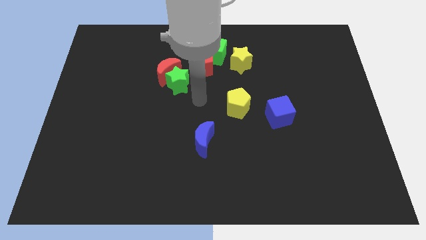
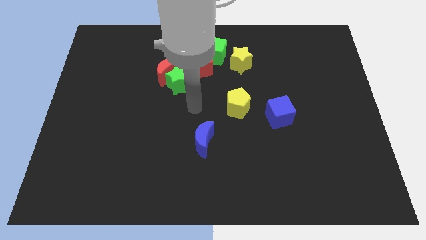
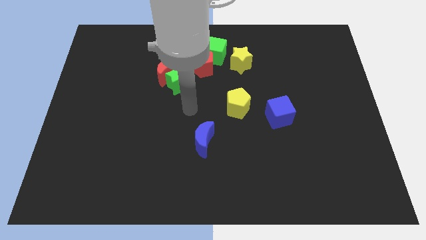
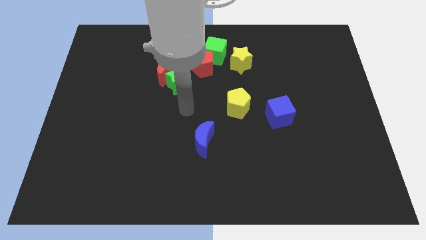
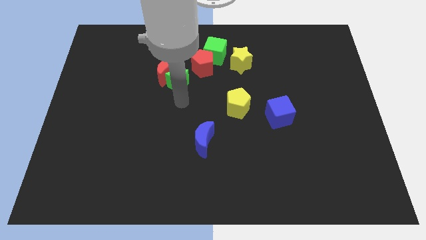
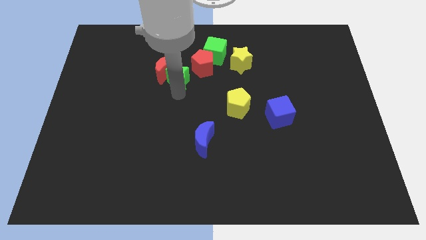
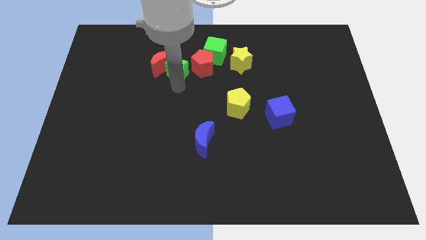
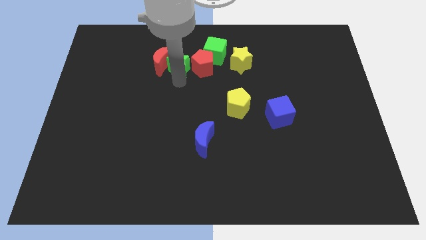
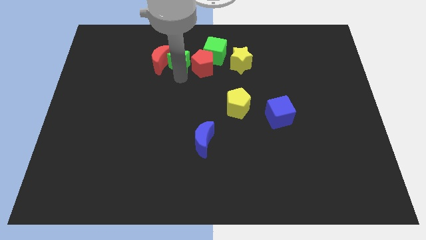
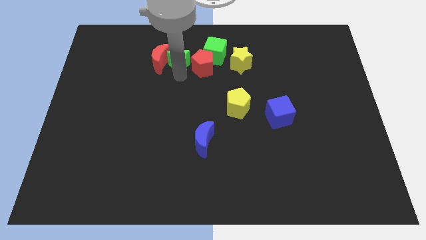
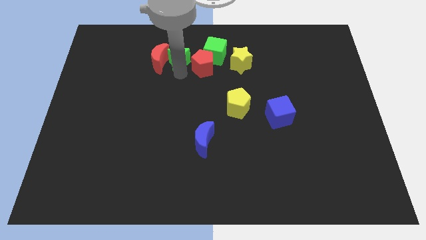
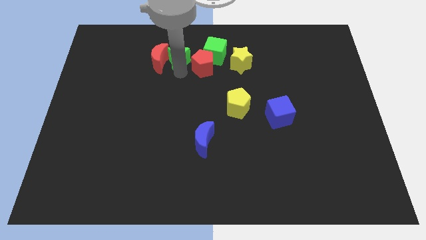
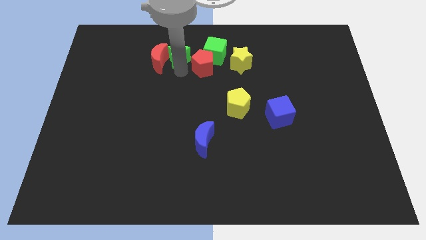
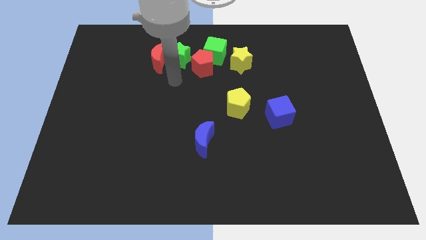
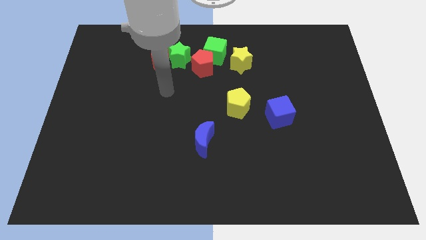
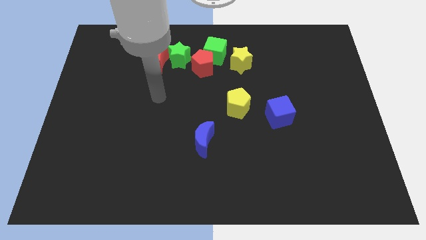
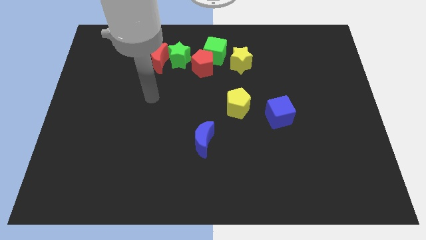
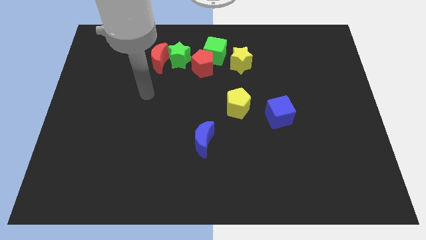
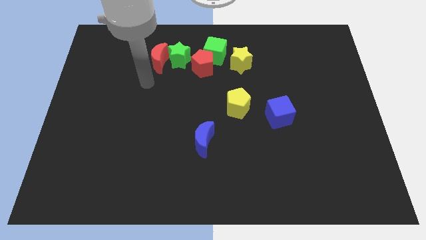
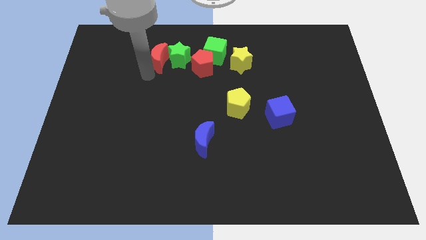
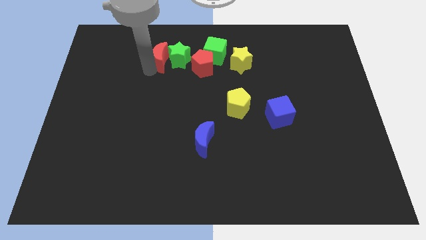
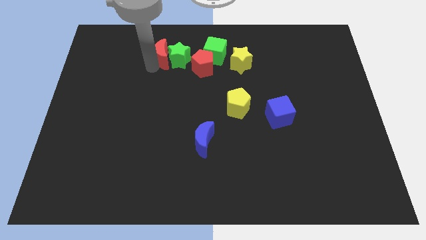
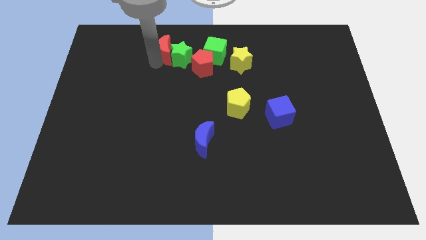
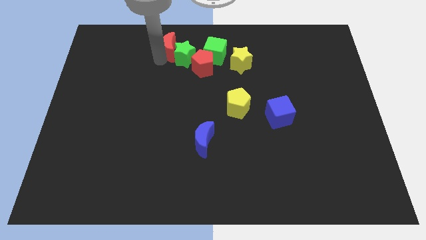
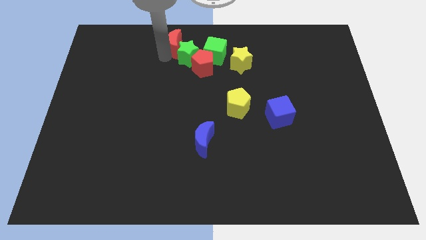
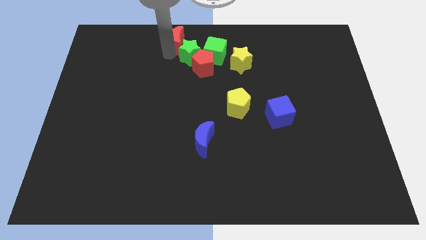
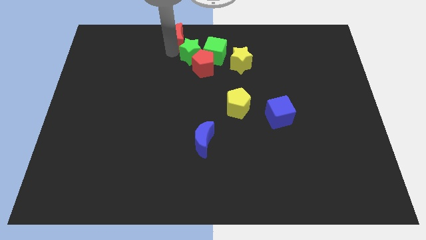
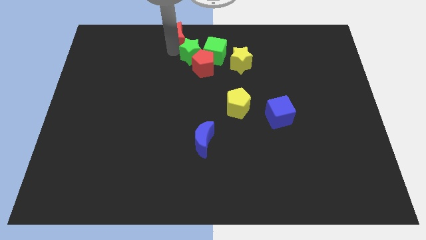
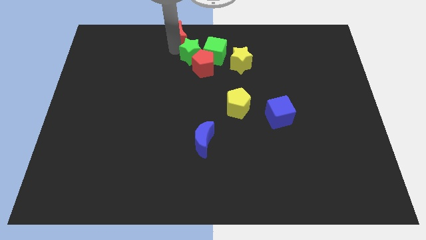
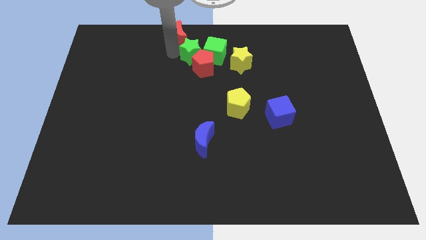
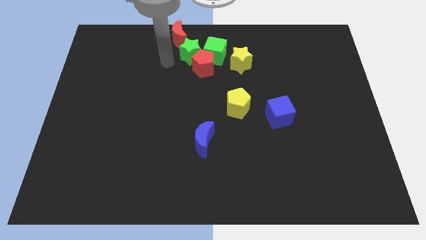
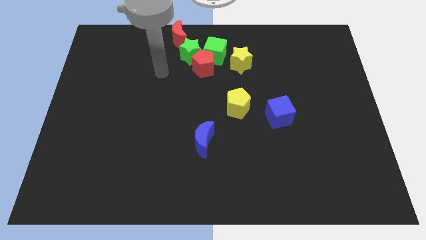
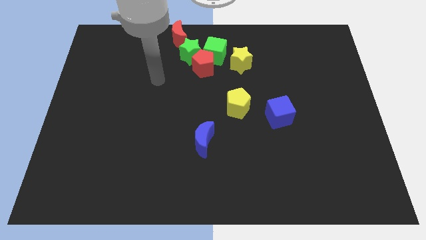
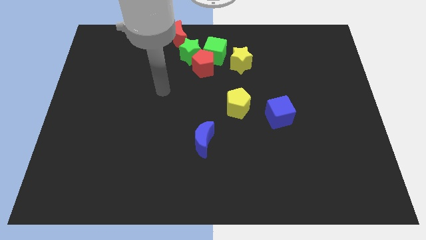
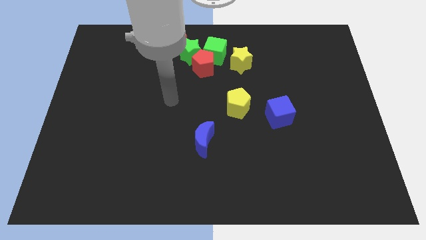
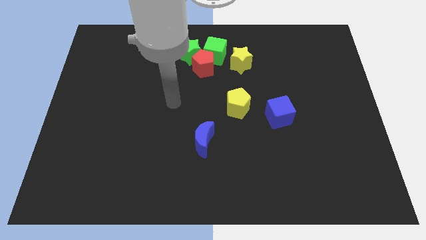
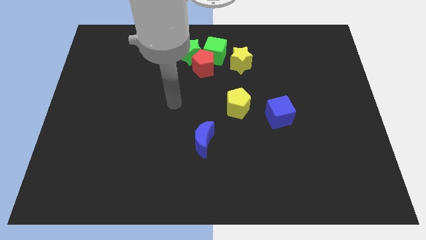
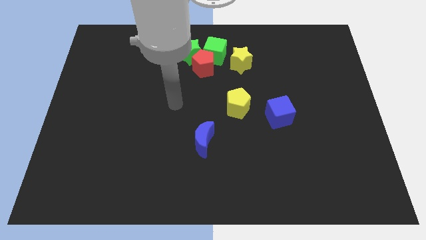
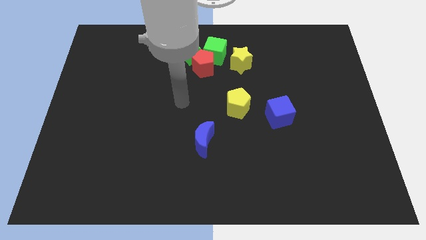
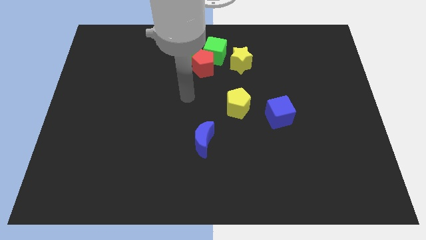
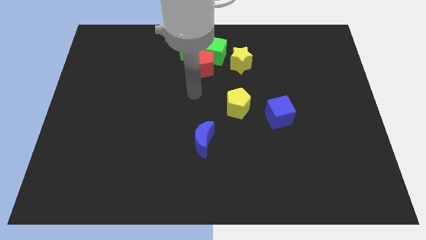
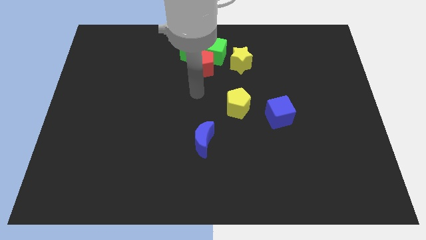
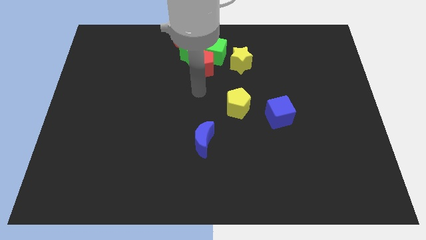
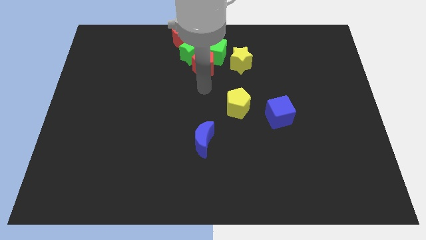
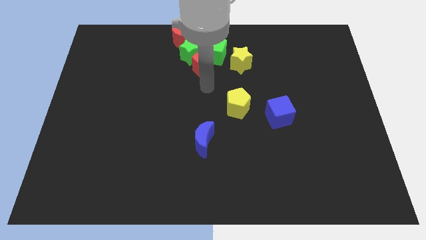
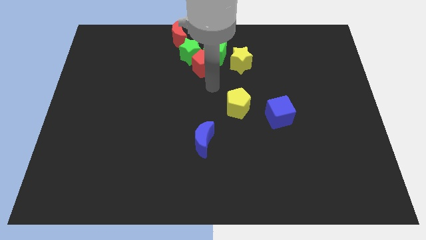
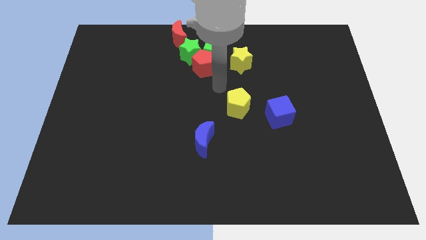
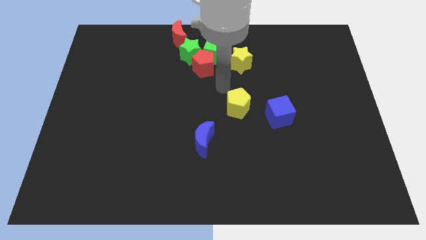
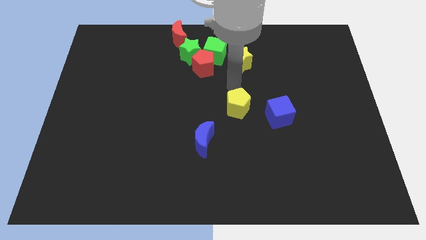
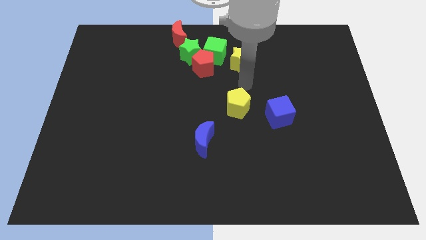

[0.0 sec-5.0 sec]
move green and red blocks to the top center of the board

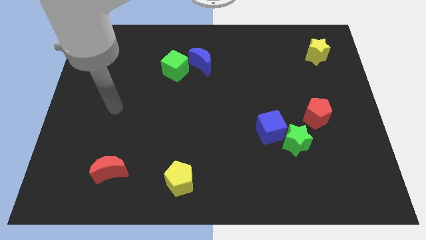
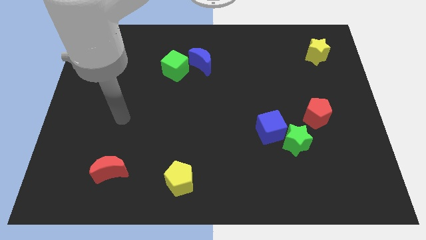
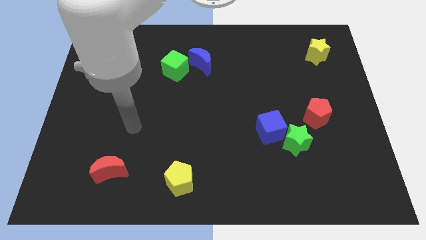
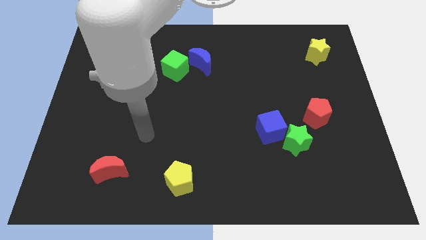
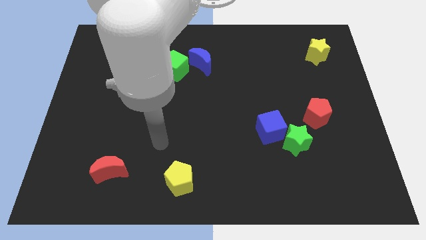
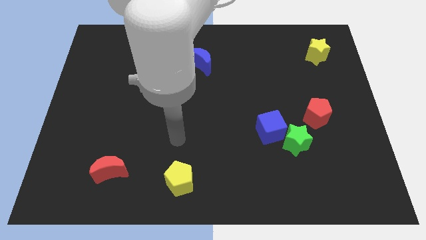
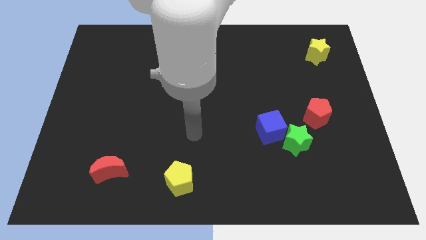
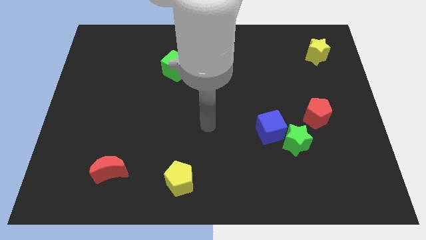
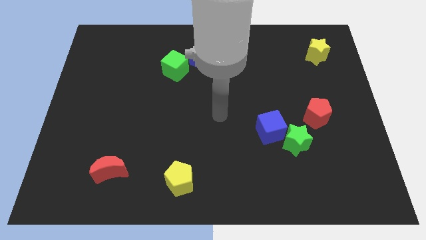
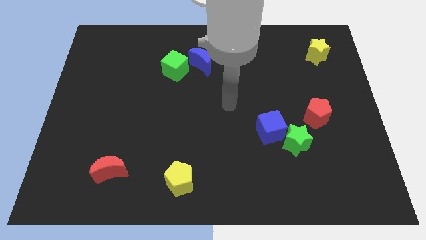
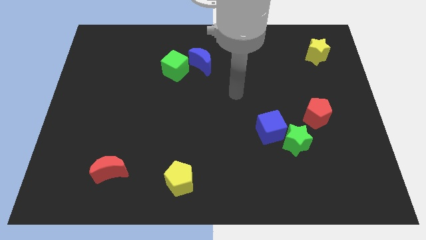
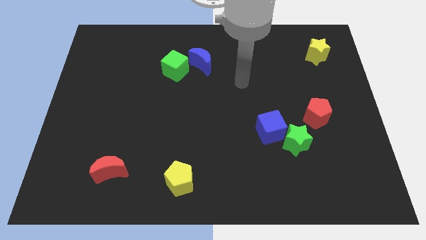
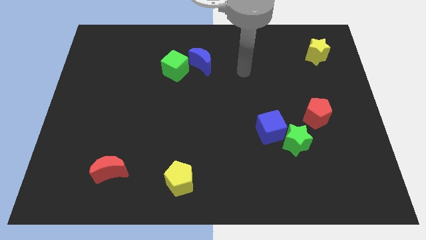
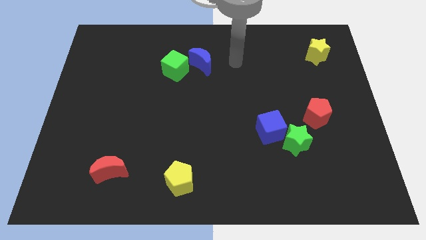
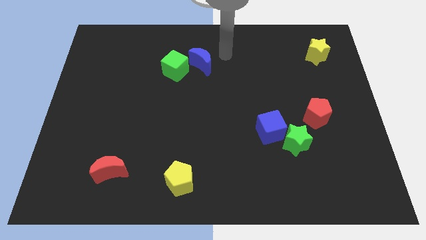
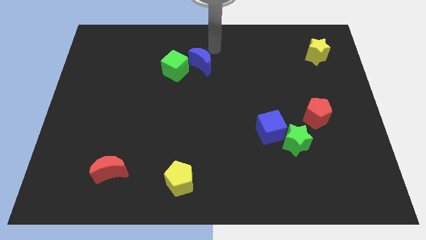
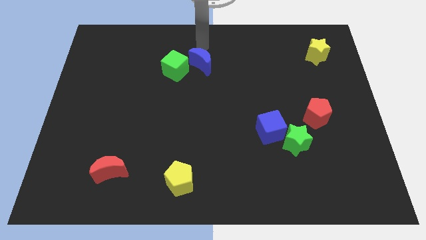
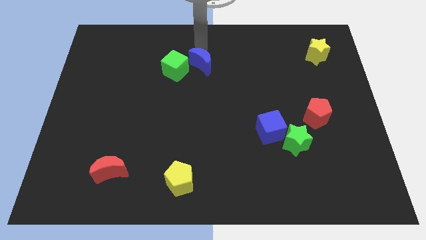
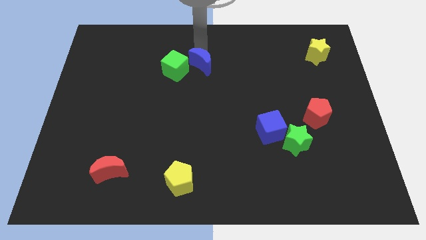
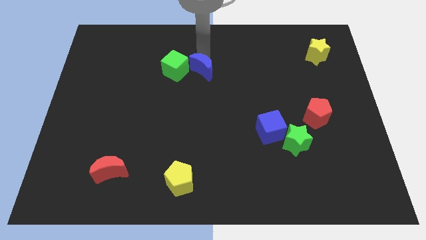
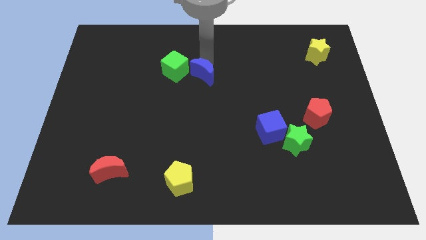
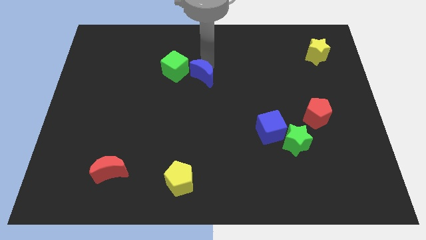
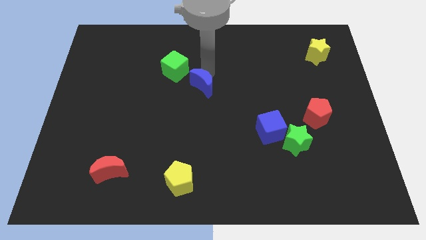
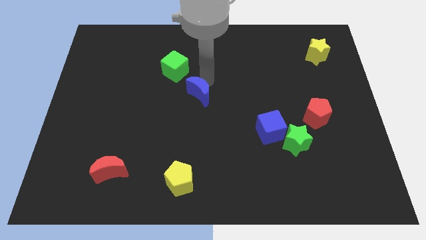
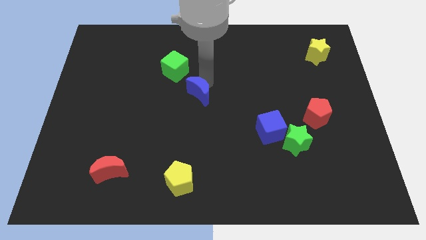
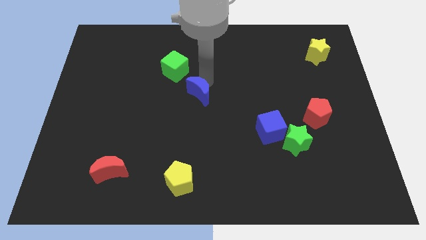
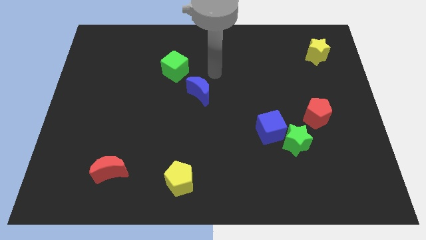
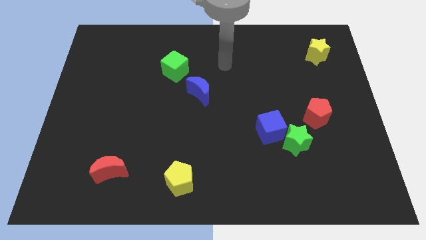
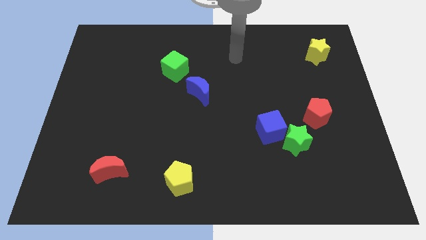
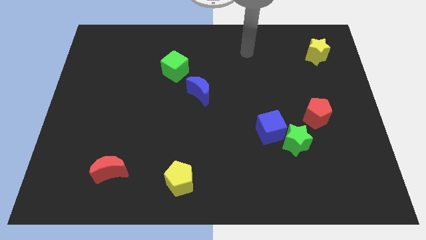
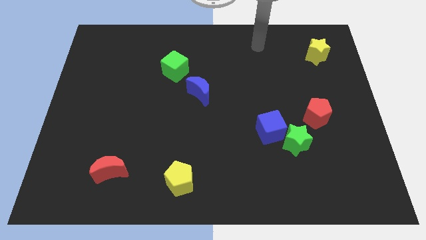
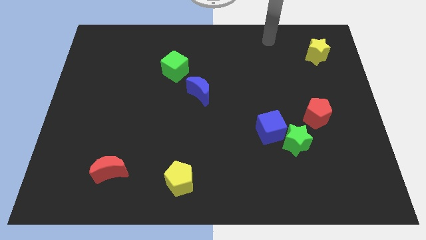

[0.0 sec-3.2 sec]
push the blue crescent downwards

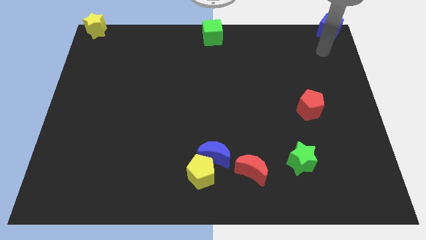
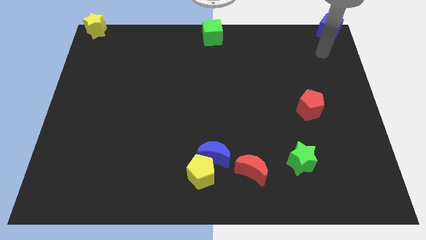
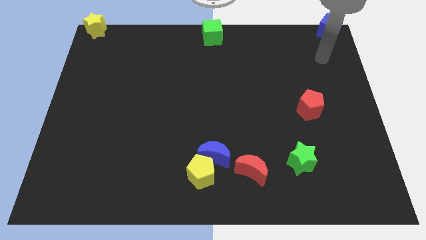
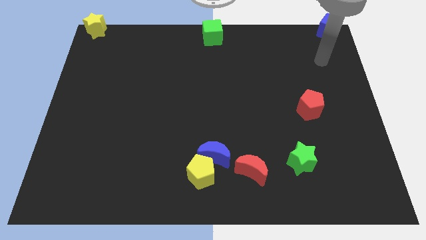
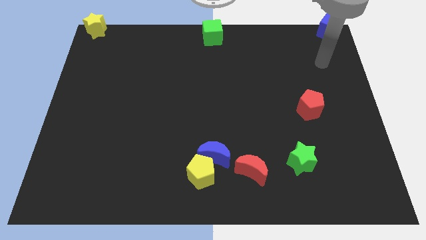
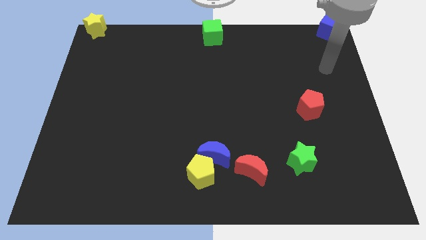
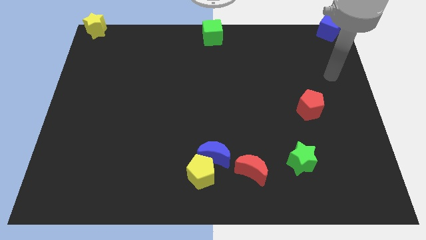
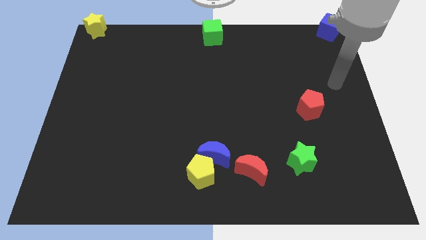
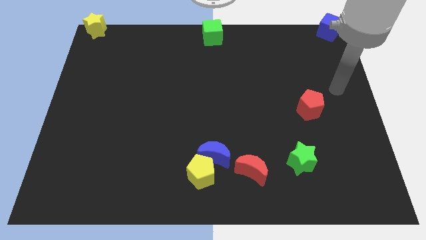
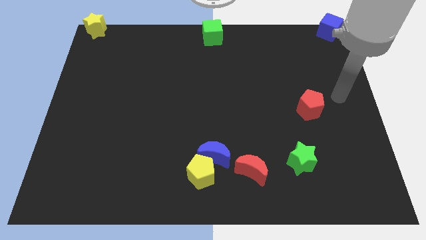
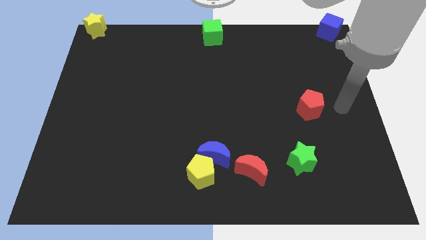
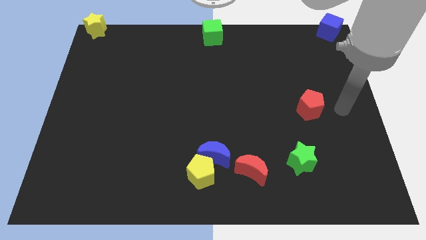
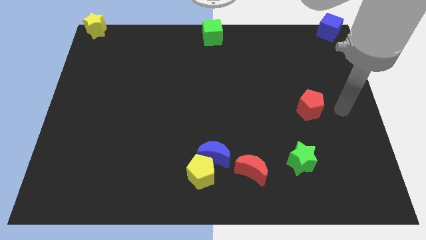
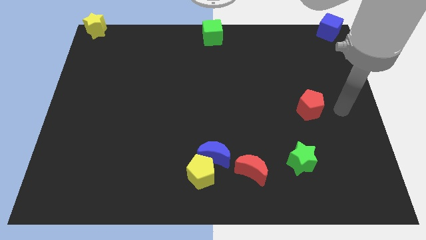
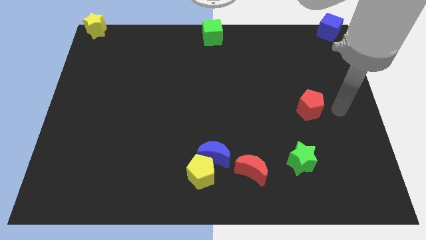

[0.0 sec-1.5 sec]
move your arm away from blue cube
